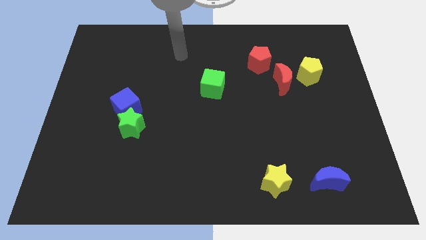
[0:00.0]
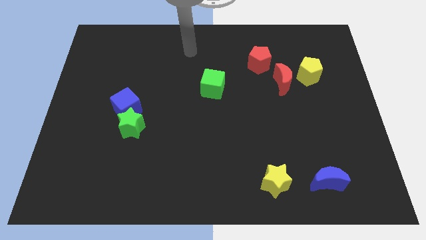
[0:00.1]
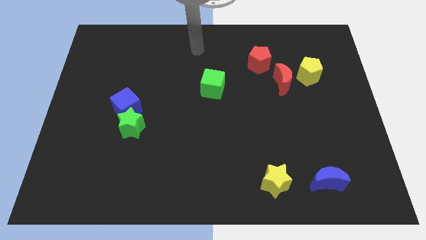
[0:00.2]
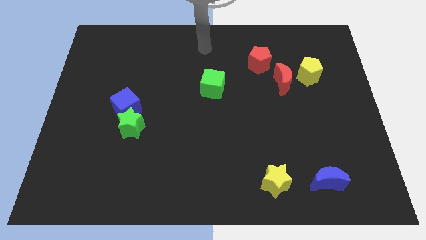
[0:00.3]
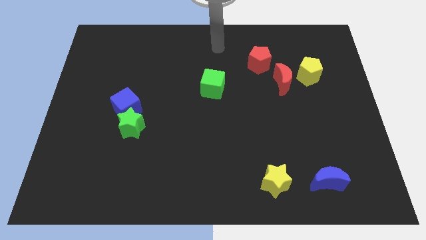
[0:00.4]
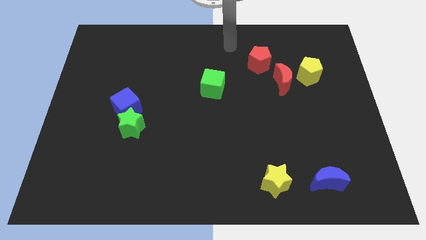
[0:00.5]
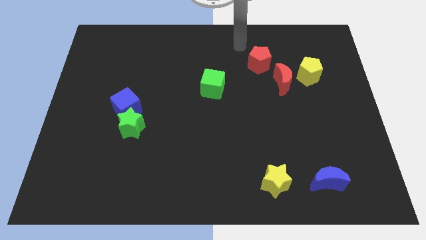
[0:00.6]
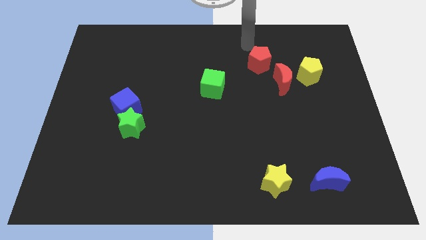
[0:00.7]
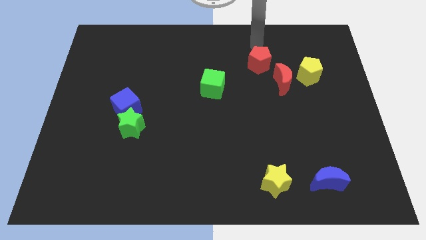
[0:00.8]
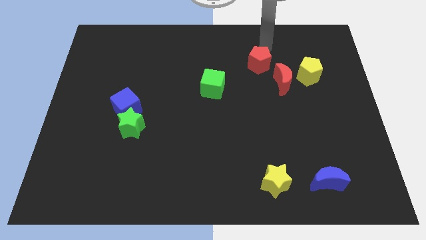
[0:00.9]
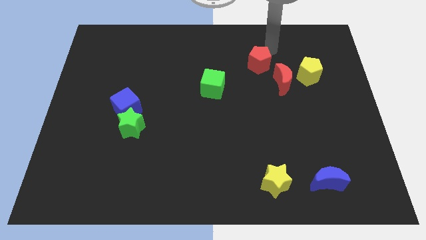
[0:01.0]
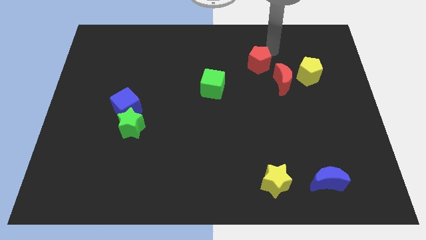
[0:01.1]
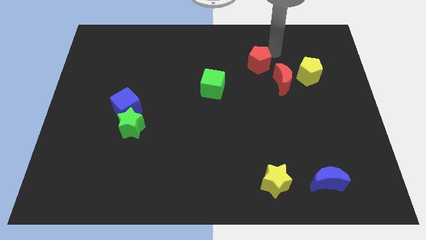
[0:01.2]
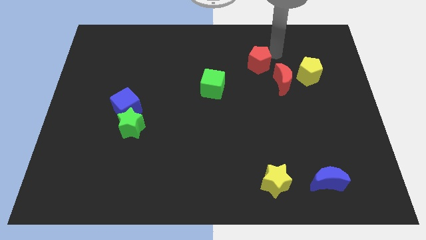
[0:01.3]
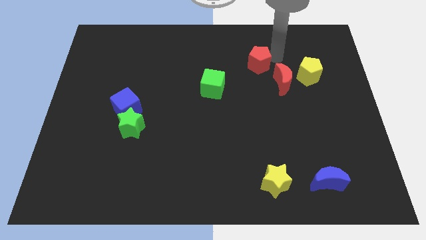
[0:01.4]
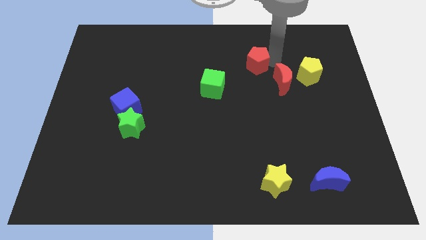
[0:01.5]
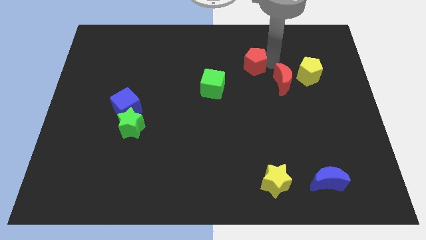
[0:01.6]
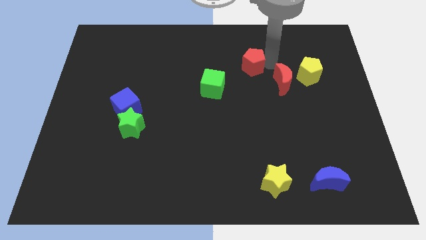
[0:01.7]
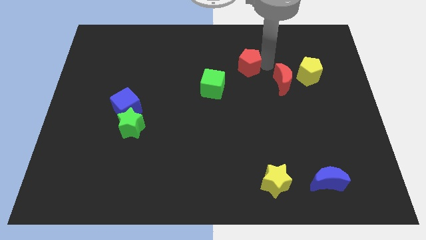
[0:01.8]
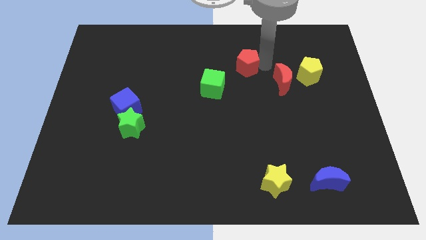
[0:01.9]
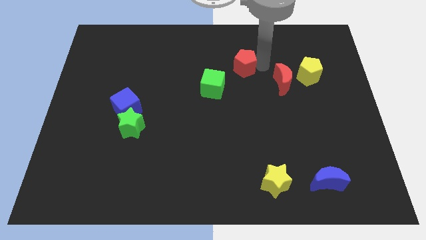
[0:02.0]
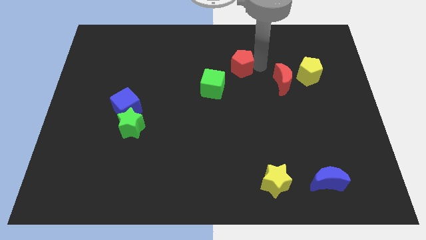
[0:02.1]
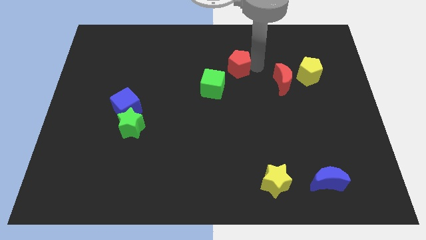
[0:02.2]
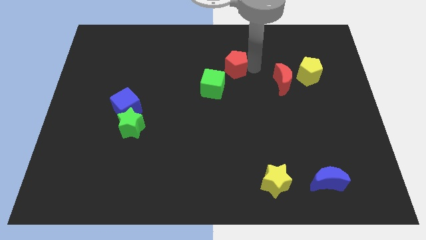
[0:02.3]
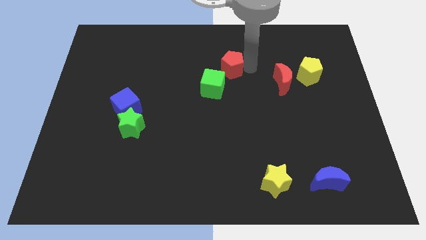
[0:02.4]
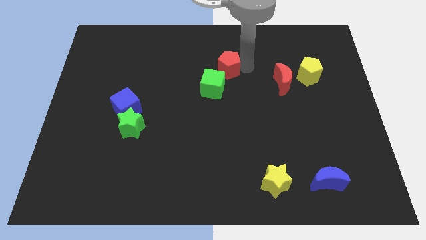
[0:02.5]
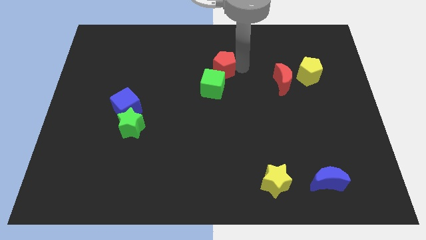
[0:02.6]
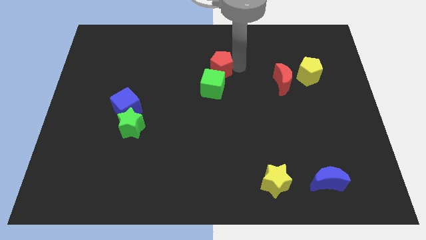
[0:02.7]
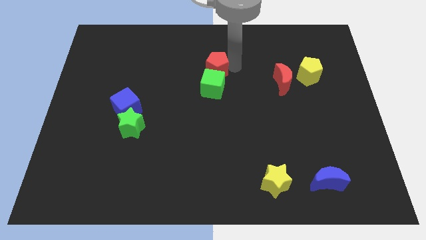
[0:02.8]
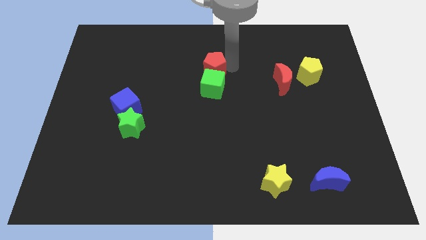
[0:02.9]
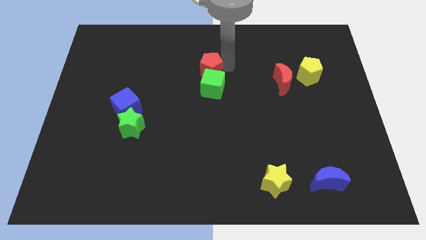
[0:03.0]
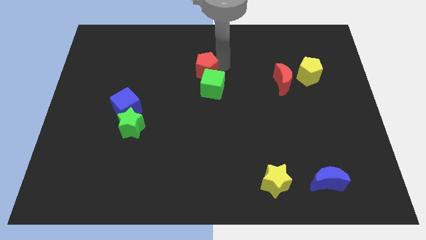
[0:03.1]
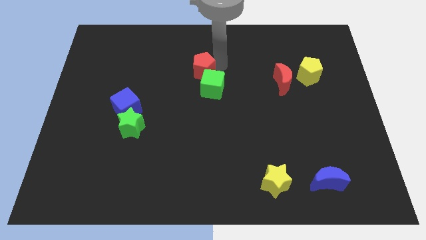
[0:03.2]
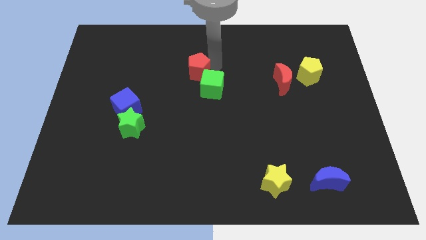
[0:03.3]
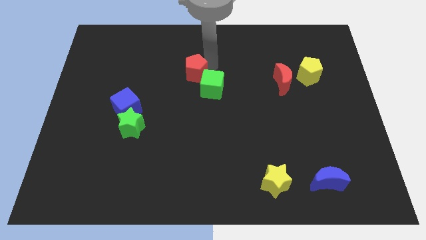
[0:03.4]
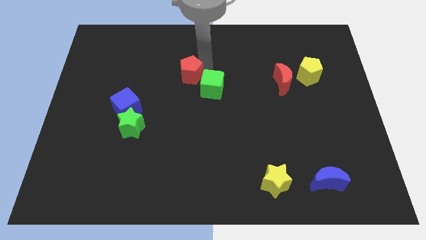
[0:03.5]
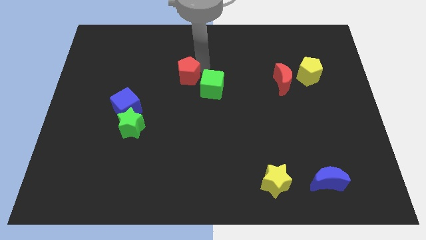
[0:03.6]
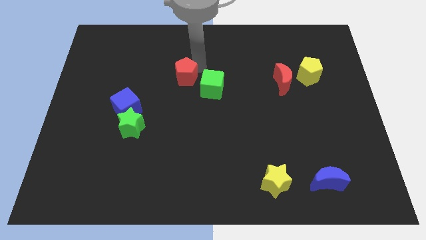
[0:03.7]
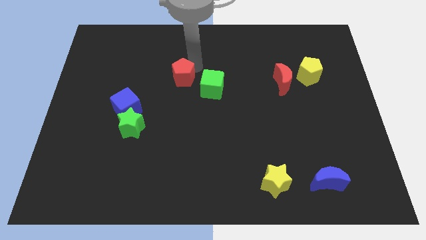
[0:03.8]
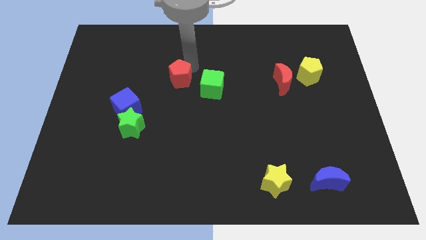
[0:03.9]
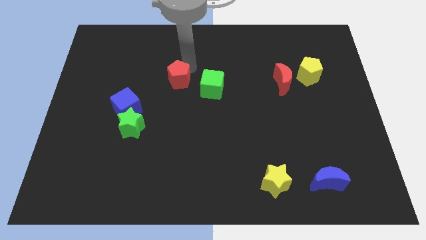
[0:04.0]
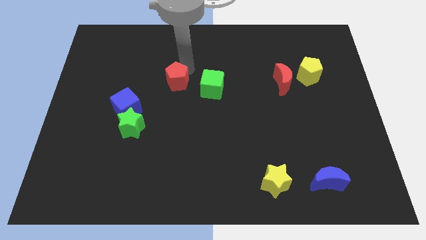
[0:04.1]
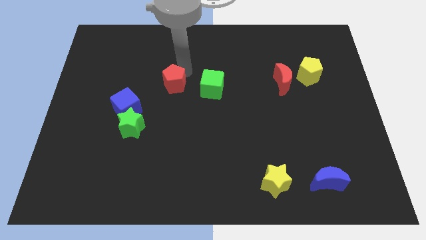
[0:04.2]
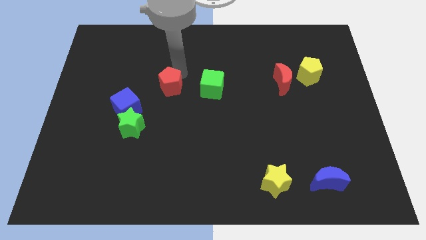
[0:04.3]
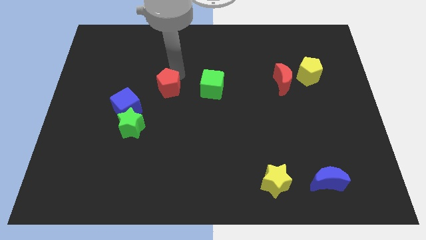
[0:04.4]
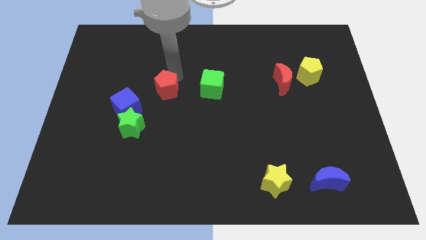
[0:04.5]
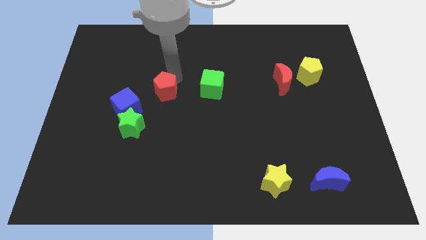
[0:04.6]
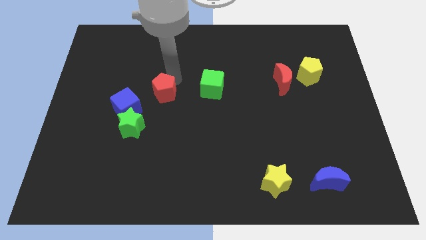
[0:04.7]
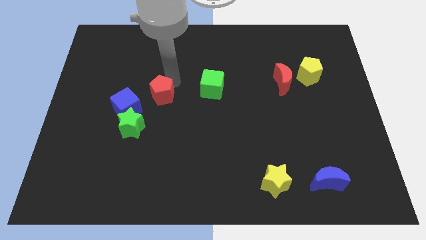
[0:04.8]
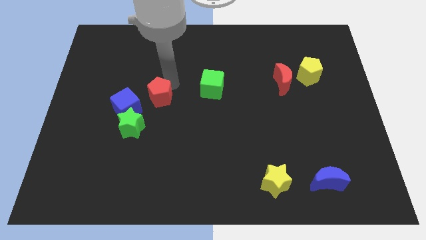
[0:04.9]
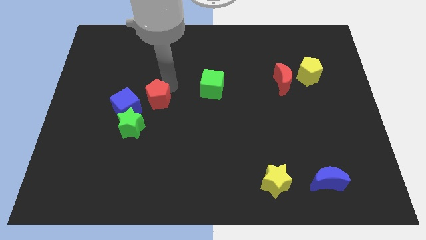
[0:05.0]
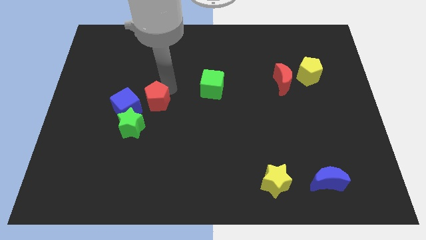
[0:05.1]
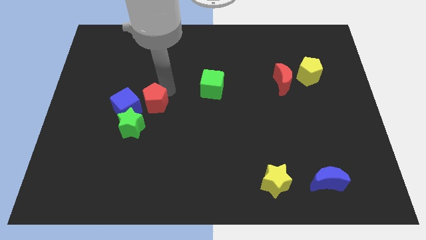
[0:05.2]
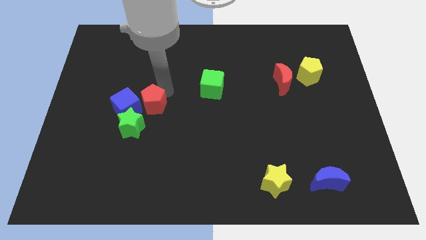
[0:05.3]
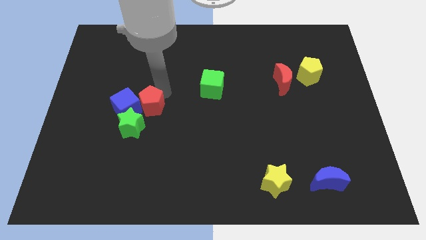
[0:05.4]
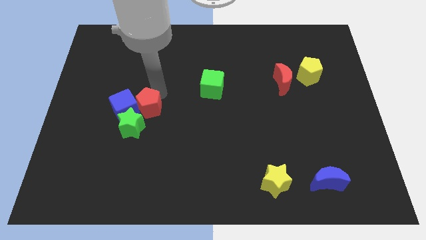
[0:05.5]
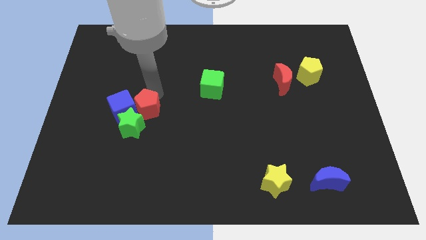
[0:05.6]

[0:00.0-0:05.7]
push the red pentagon close to the blue cube

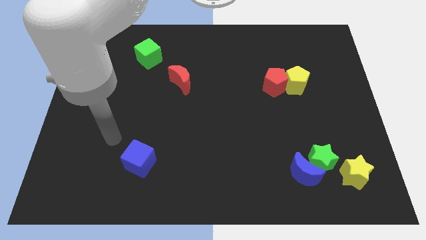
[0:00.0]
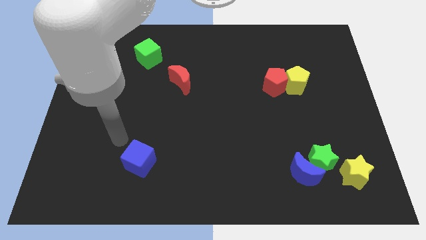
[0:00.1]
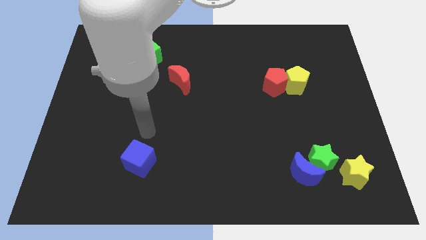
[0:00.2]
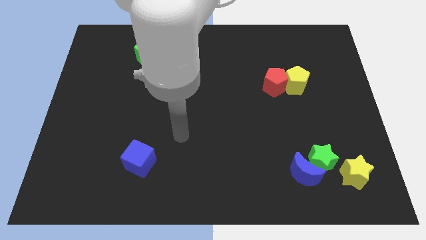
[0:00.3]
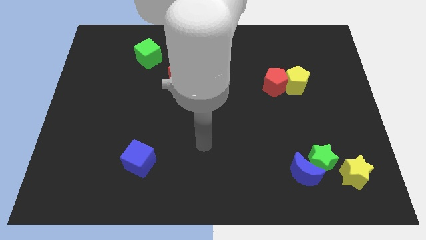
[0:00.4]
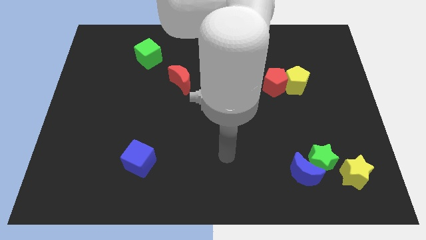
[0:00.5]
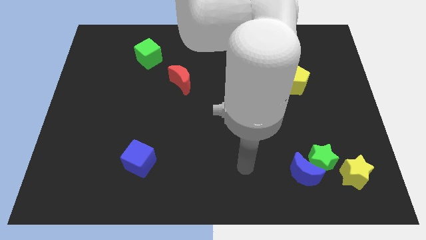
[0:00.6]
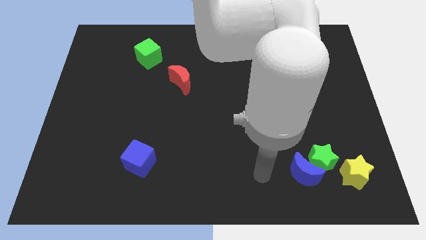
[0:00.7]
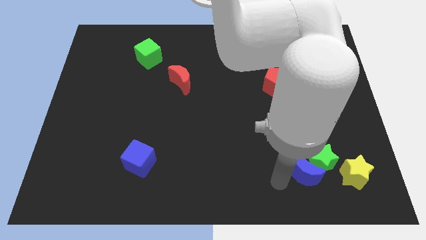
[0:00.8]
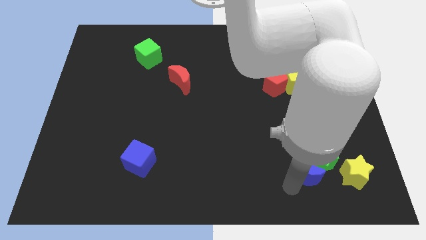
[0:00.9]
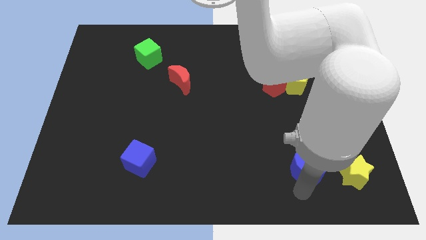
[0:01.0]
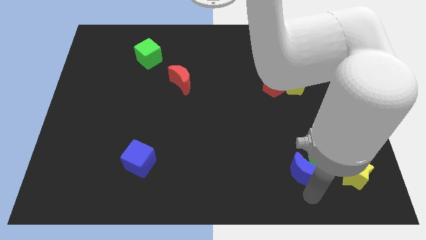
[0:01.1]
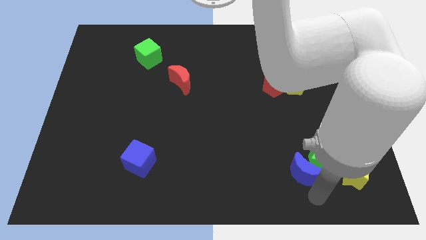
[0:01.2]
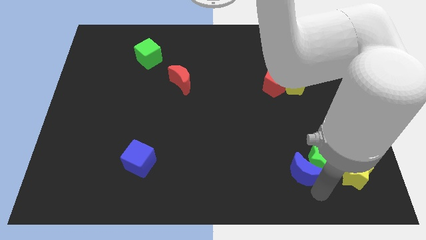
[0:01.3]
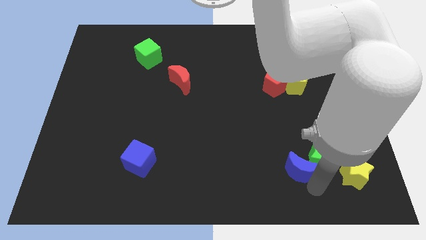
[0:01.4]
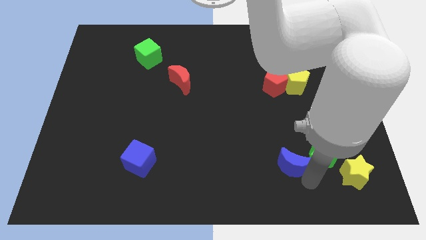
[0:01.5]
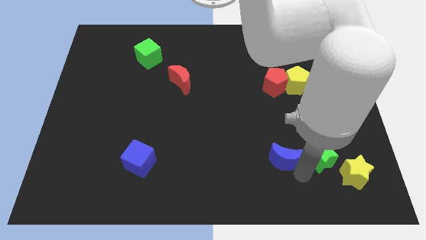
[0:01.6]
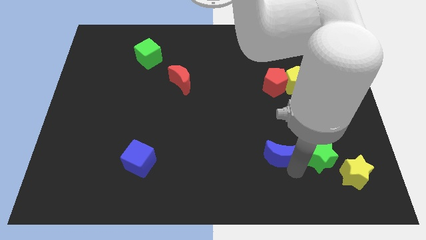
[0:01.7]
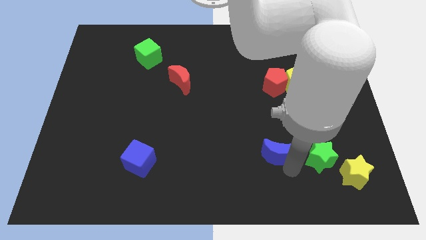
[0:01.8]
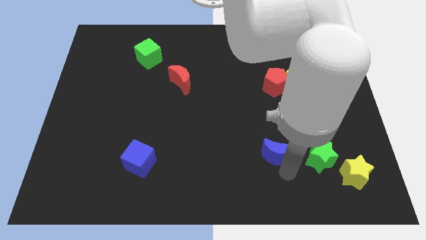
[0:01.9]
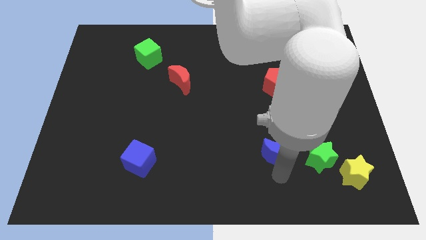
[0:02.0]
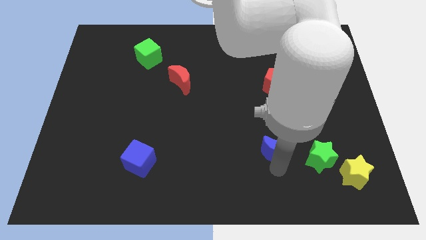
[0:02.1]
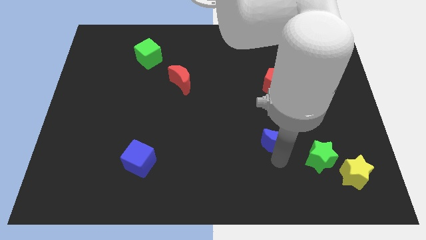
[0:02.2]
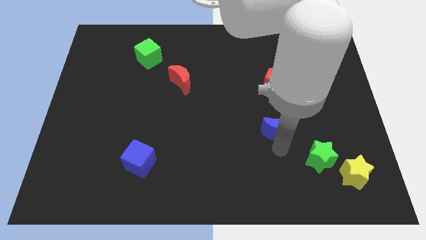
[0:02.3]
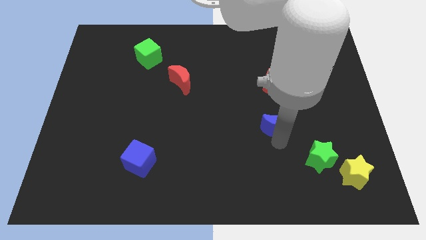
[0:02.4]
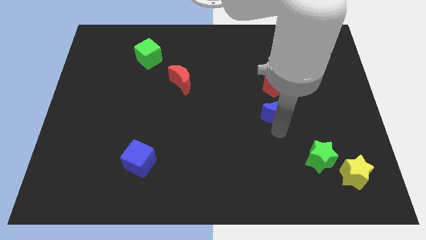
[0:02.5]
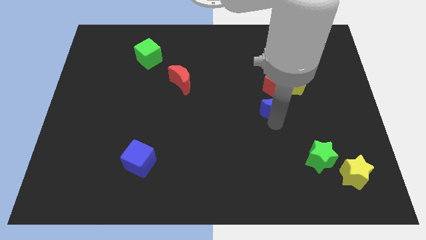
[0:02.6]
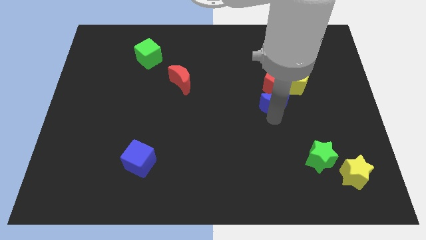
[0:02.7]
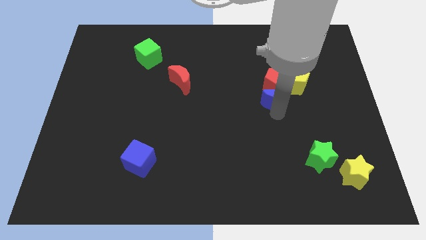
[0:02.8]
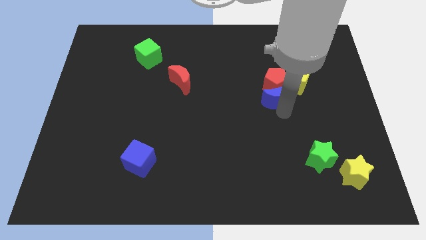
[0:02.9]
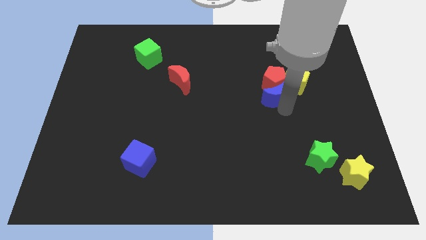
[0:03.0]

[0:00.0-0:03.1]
slide the blue moon to the red pentagon
